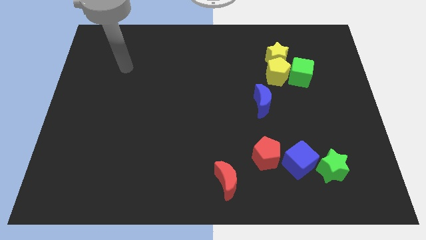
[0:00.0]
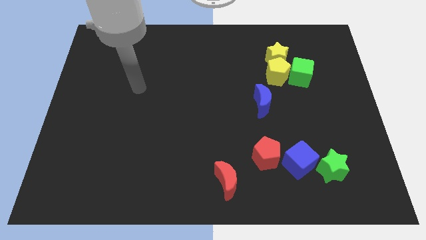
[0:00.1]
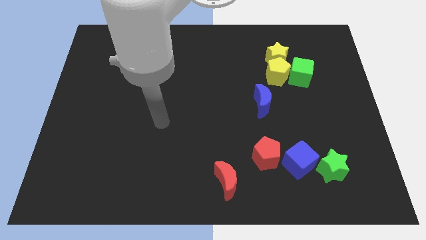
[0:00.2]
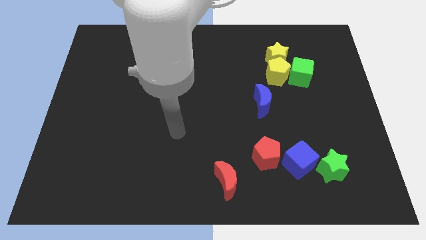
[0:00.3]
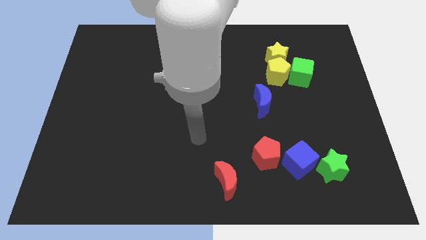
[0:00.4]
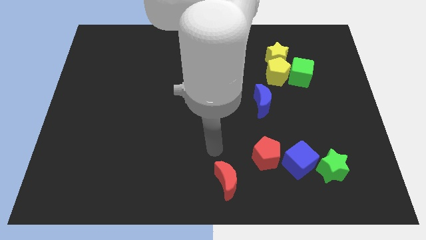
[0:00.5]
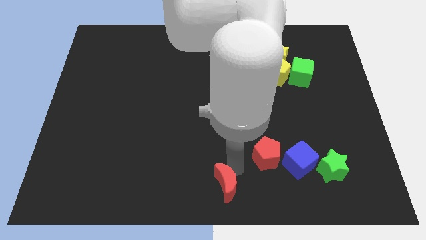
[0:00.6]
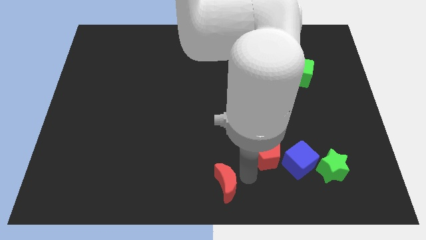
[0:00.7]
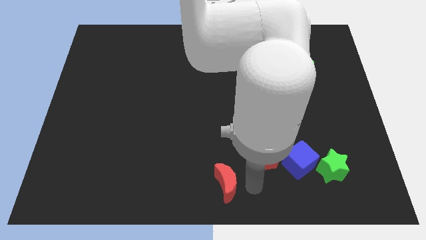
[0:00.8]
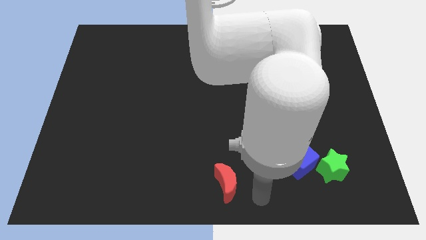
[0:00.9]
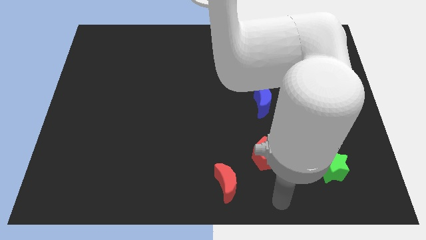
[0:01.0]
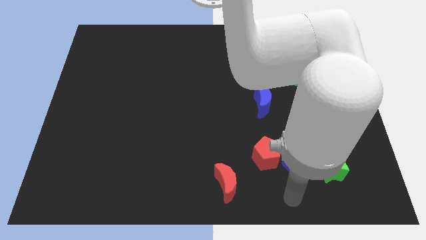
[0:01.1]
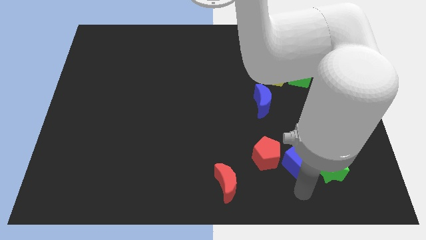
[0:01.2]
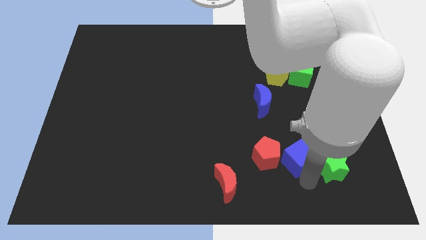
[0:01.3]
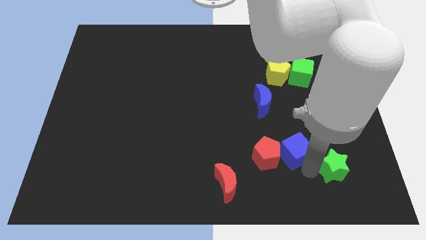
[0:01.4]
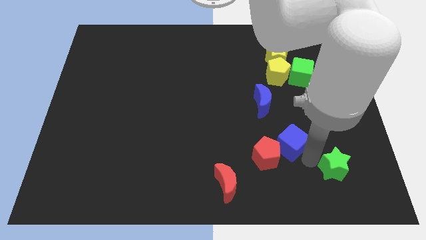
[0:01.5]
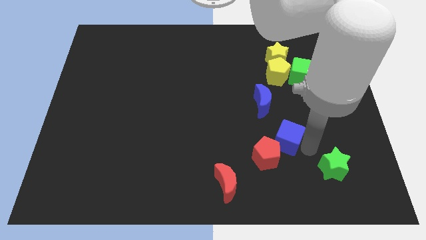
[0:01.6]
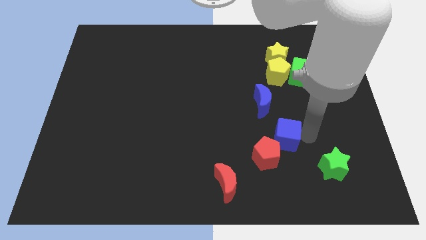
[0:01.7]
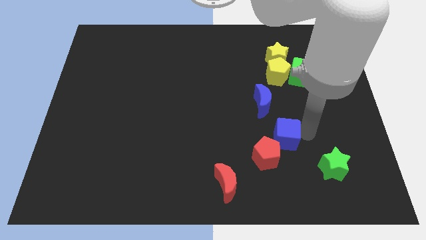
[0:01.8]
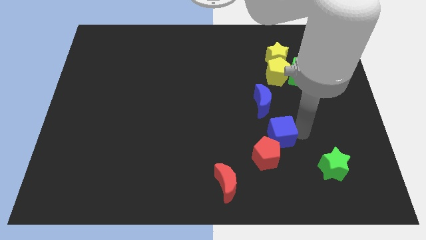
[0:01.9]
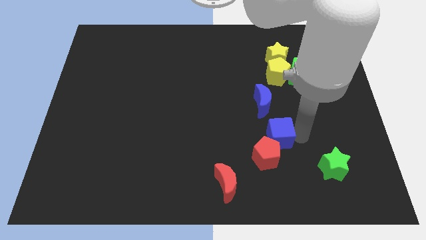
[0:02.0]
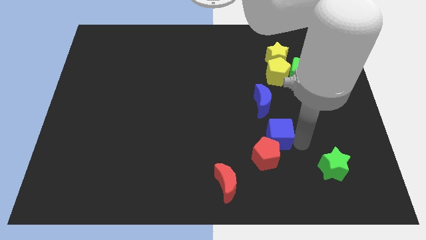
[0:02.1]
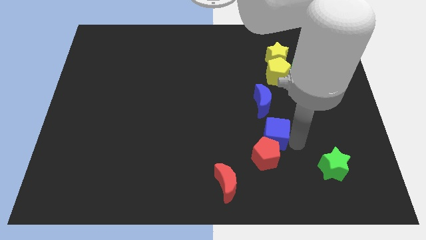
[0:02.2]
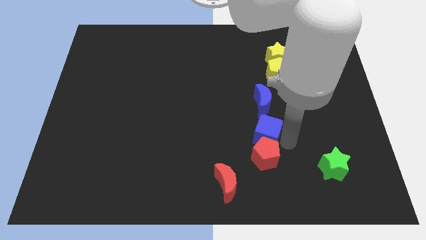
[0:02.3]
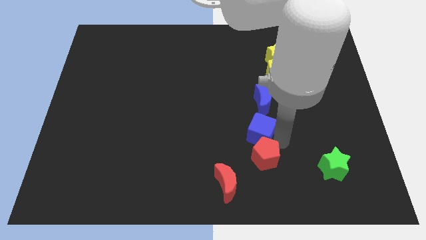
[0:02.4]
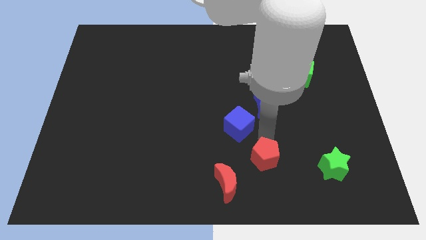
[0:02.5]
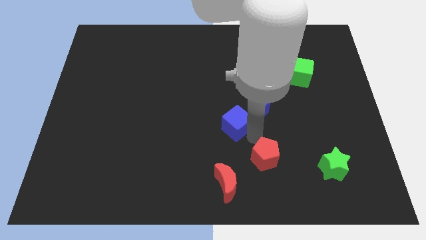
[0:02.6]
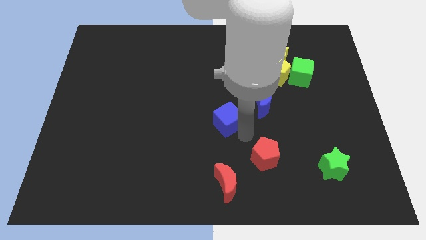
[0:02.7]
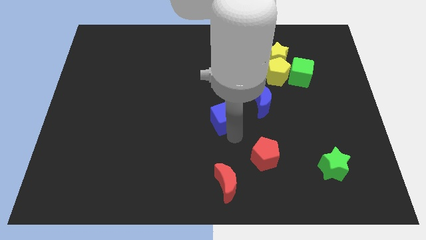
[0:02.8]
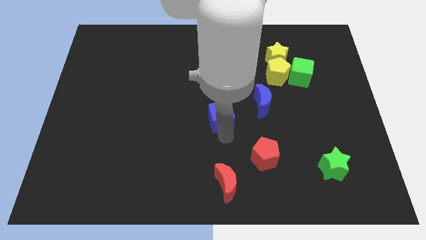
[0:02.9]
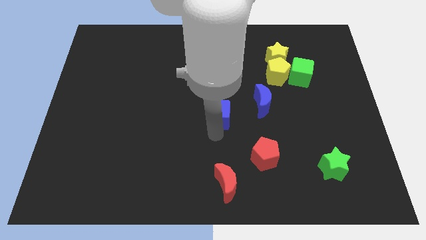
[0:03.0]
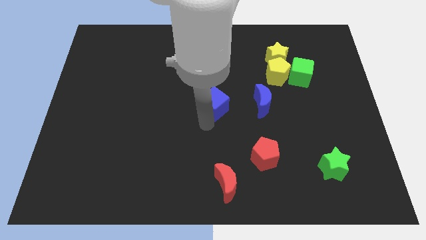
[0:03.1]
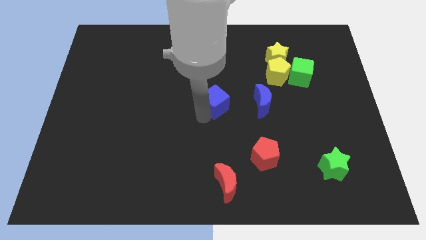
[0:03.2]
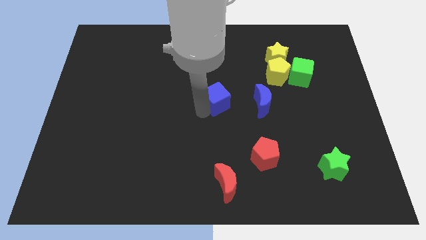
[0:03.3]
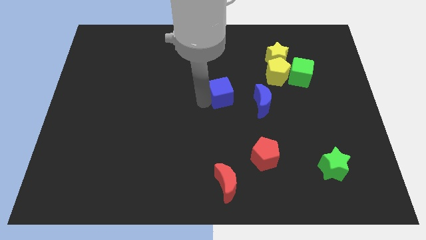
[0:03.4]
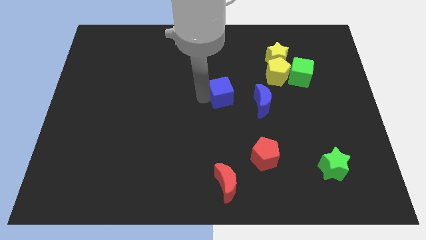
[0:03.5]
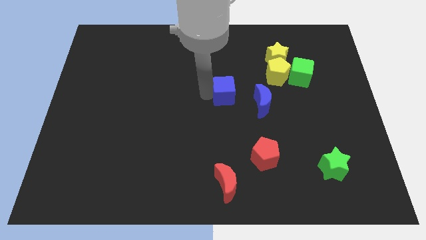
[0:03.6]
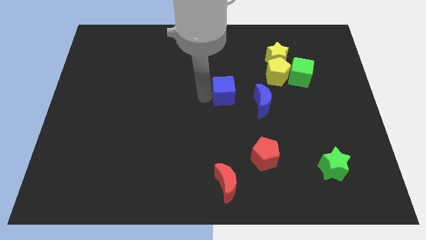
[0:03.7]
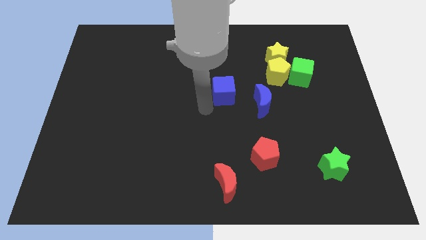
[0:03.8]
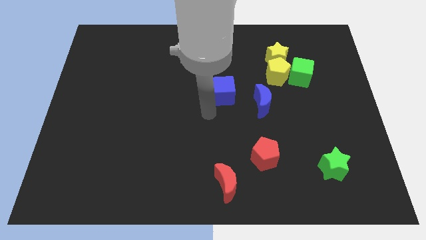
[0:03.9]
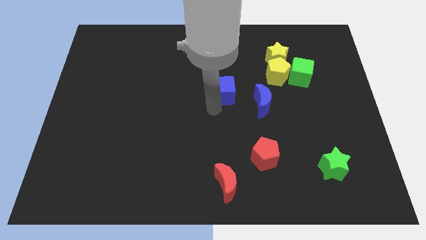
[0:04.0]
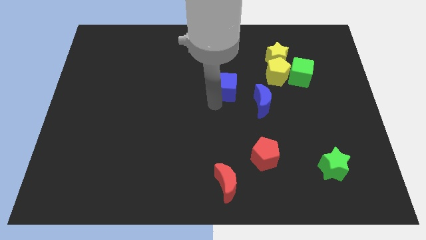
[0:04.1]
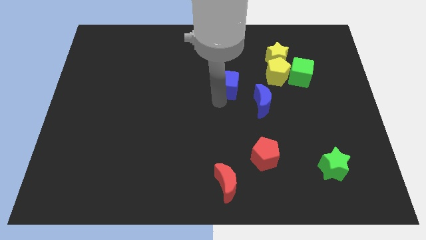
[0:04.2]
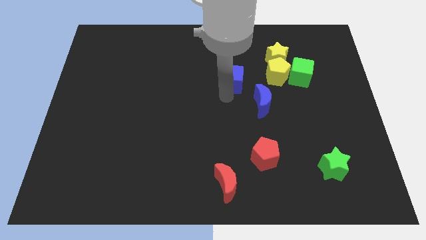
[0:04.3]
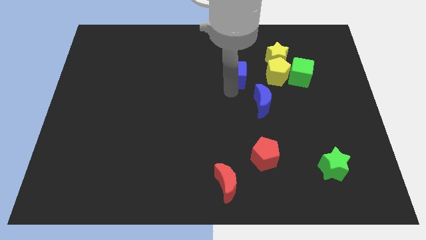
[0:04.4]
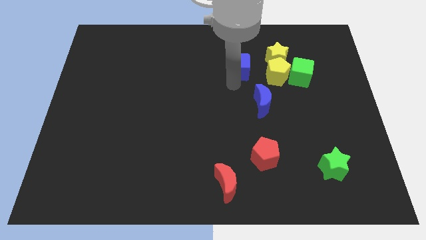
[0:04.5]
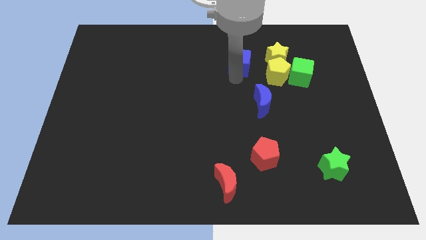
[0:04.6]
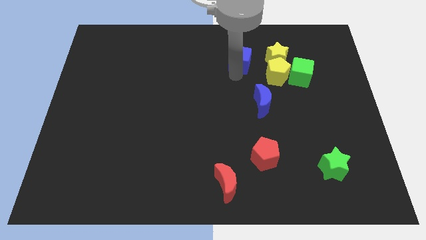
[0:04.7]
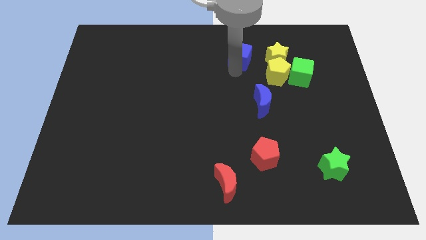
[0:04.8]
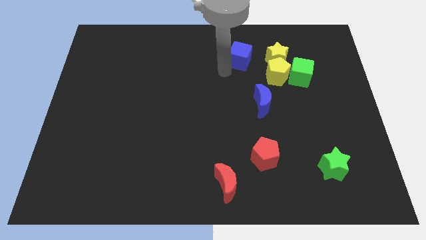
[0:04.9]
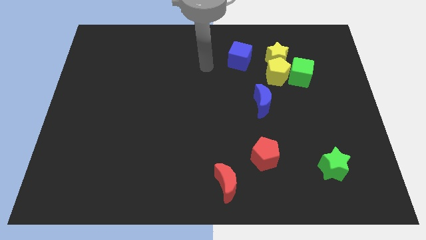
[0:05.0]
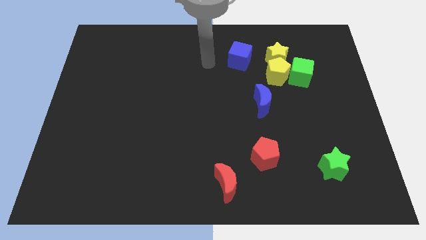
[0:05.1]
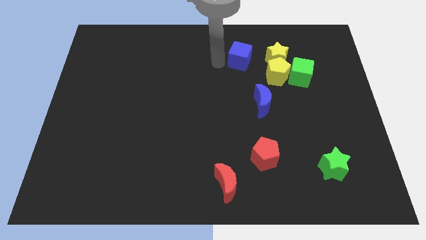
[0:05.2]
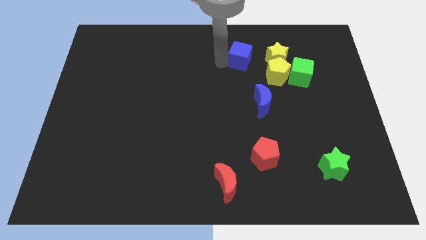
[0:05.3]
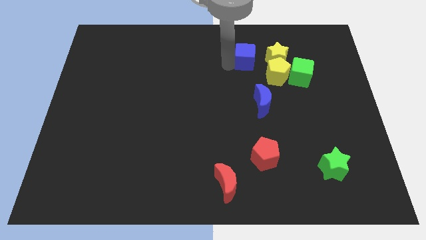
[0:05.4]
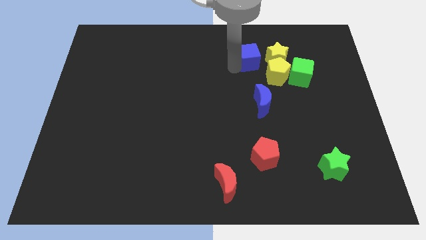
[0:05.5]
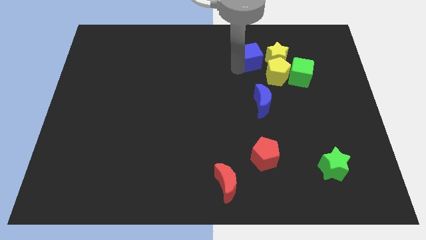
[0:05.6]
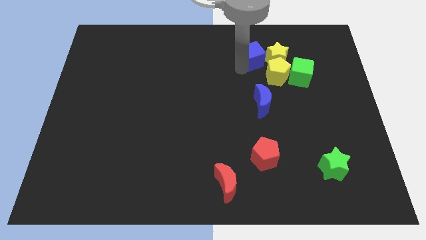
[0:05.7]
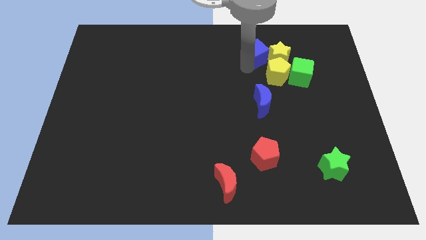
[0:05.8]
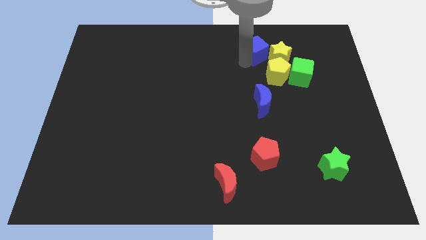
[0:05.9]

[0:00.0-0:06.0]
slide the blue cube next to the yellow star

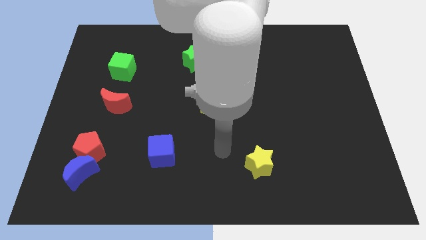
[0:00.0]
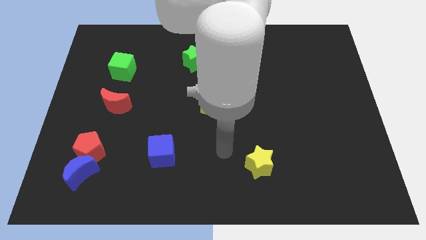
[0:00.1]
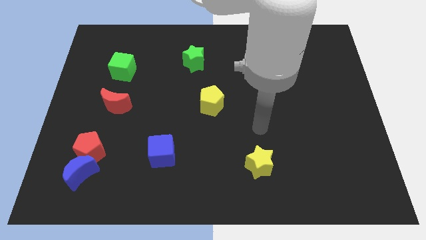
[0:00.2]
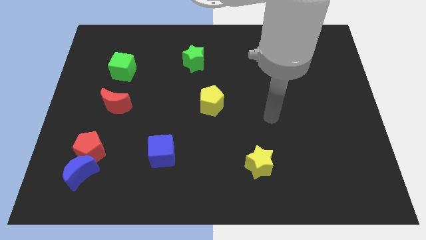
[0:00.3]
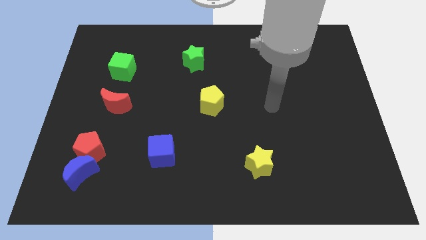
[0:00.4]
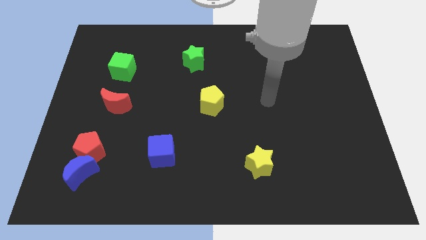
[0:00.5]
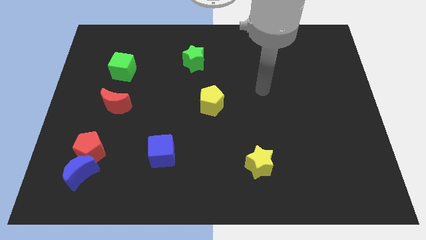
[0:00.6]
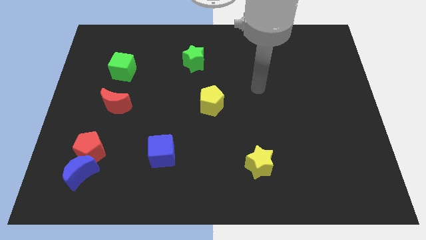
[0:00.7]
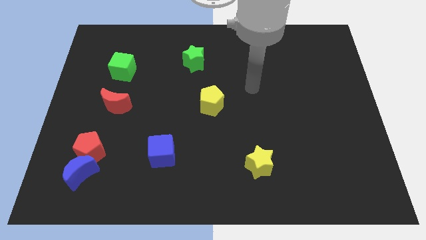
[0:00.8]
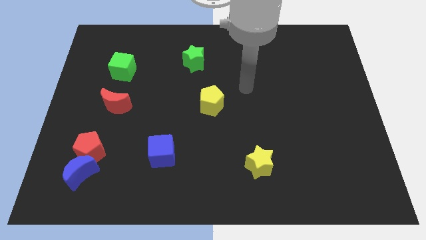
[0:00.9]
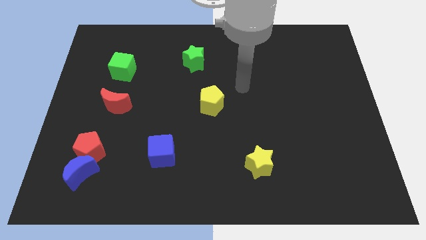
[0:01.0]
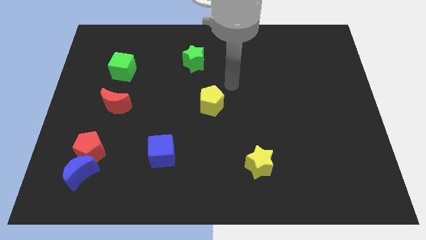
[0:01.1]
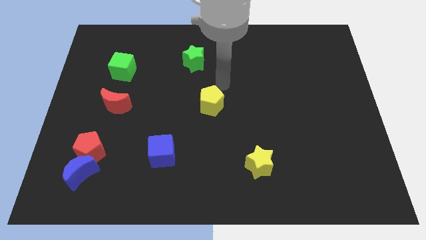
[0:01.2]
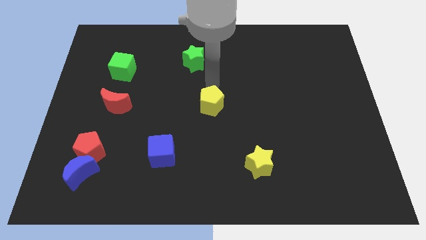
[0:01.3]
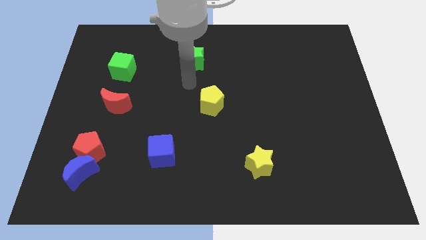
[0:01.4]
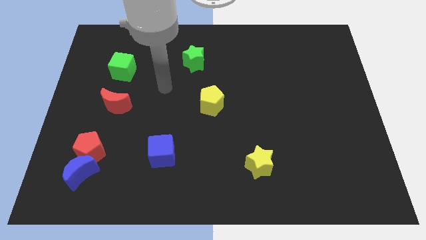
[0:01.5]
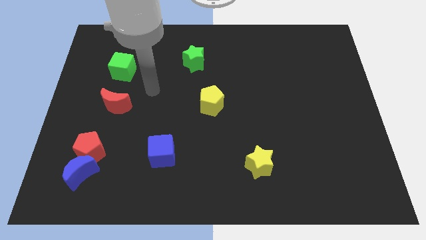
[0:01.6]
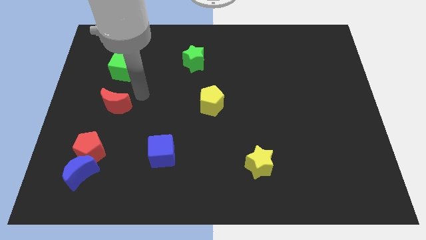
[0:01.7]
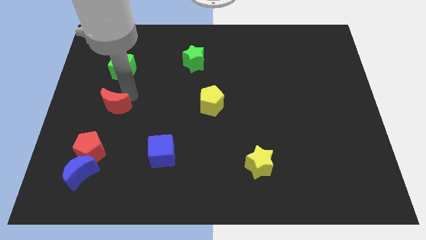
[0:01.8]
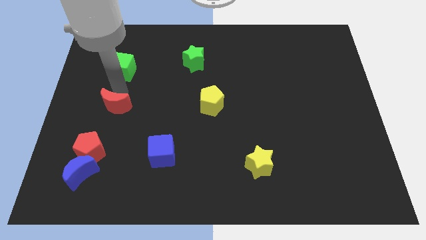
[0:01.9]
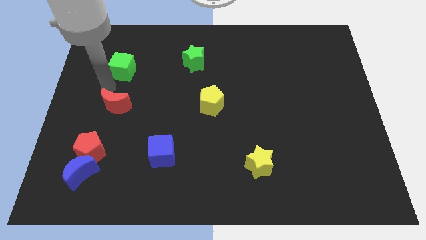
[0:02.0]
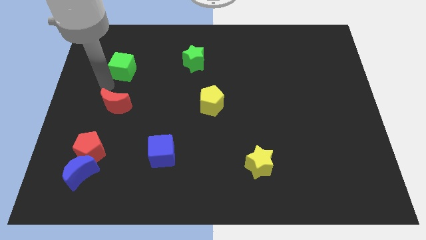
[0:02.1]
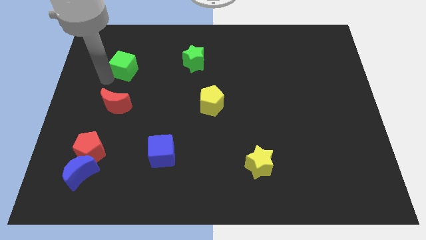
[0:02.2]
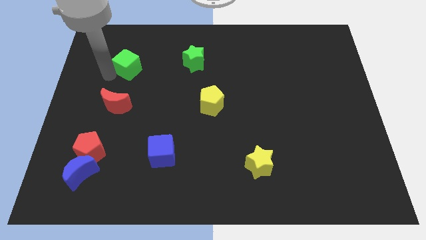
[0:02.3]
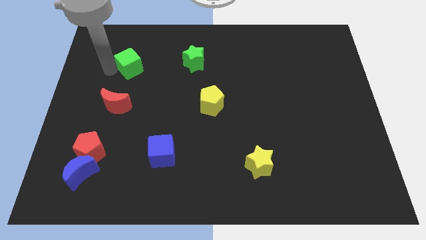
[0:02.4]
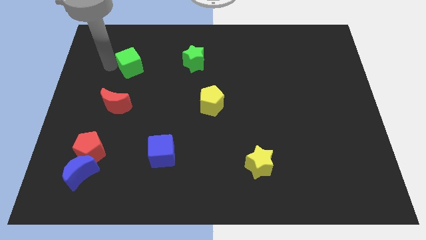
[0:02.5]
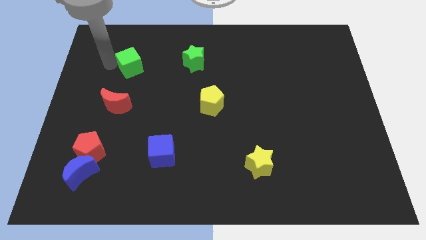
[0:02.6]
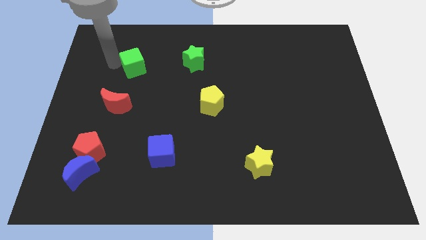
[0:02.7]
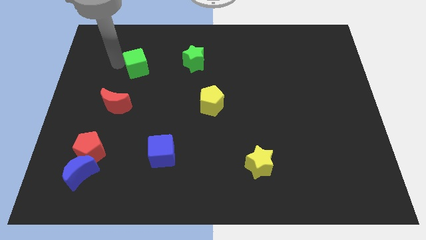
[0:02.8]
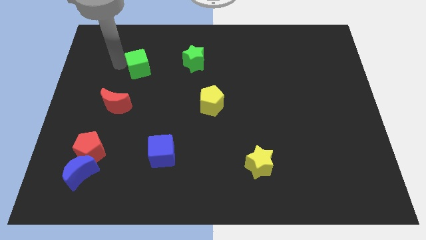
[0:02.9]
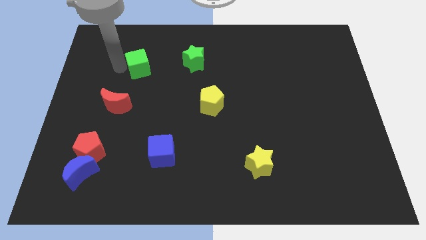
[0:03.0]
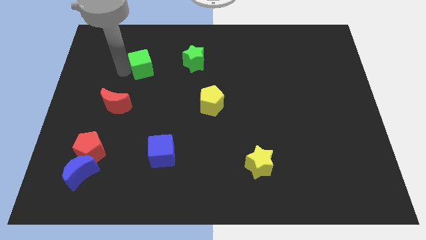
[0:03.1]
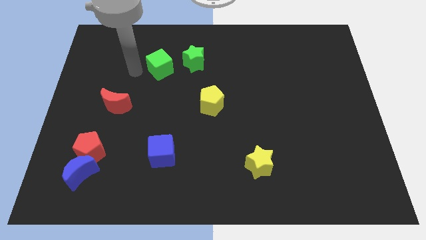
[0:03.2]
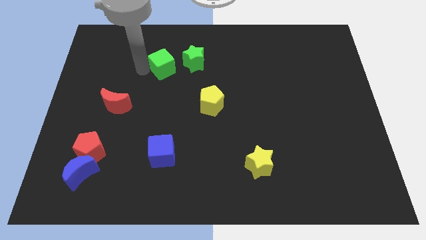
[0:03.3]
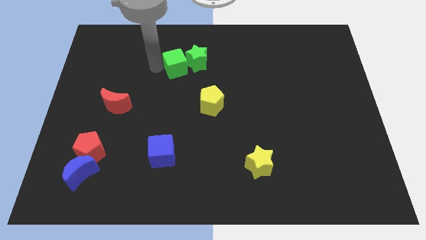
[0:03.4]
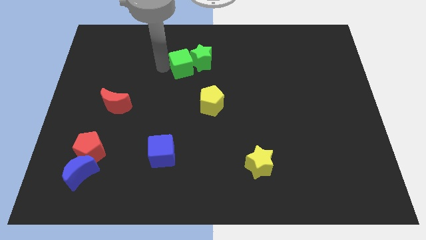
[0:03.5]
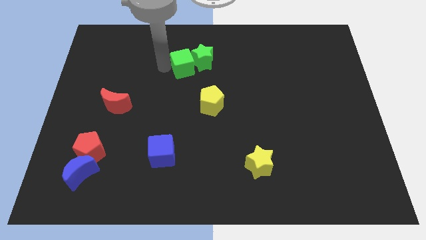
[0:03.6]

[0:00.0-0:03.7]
slide the green cube to the green star
